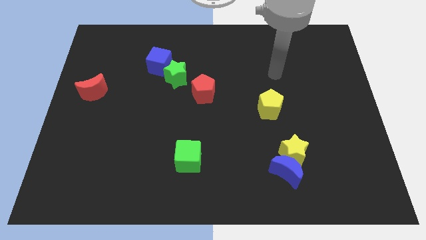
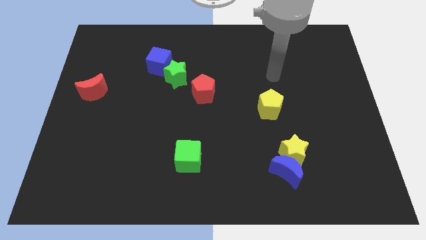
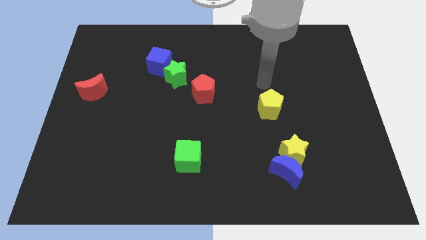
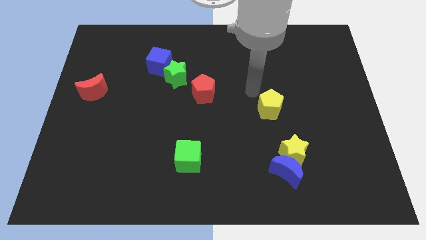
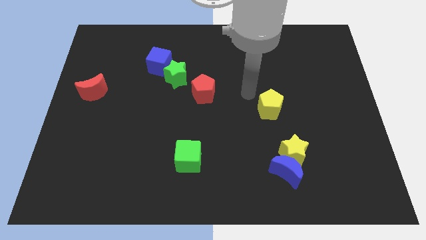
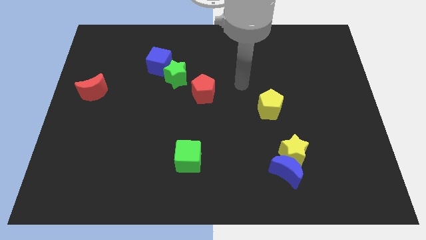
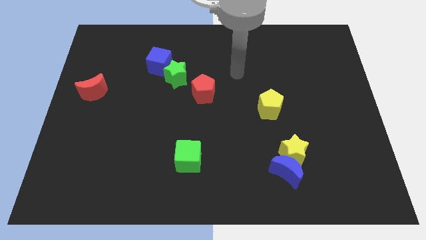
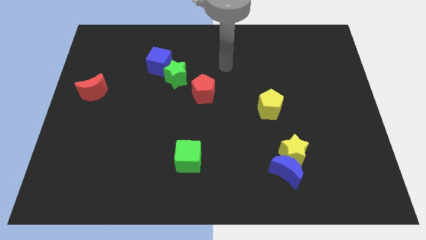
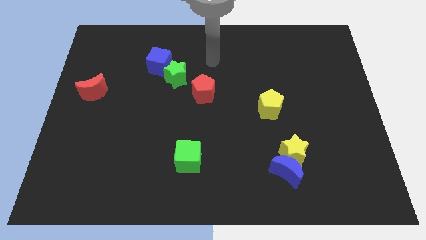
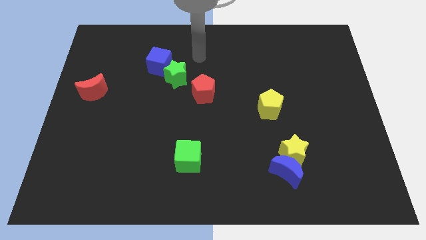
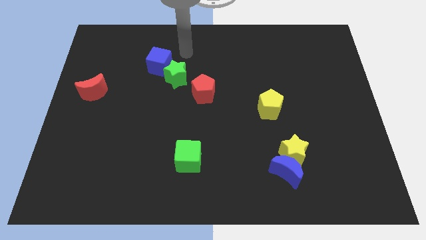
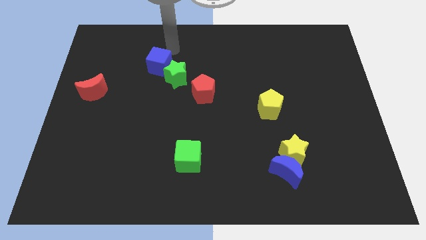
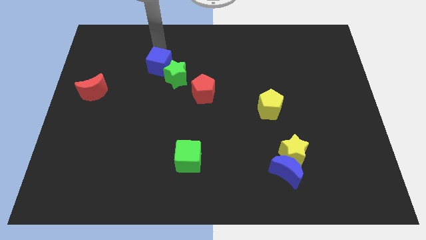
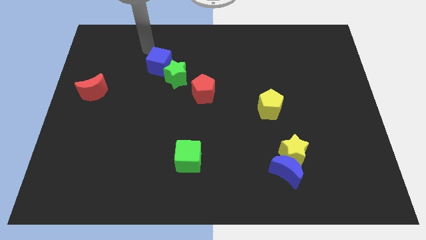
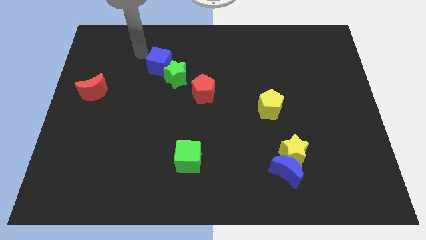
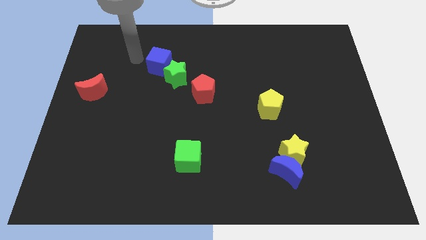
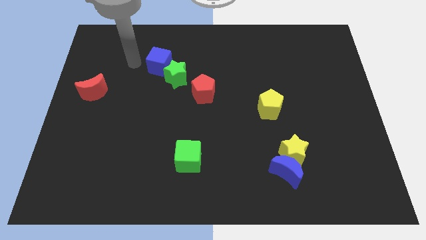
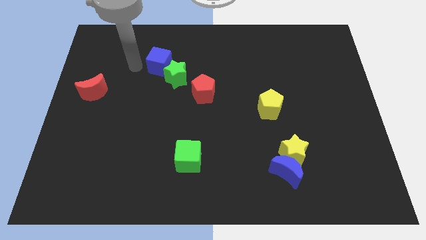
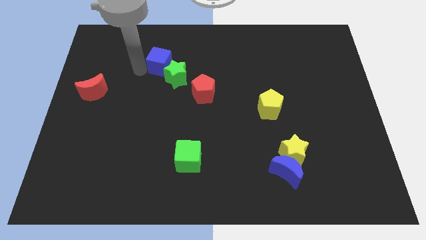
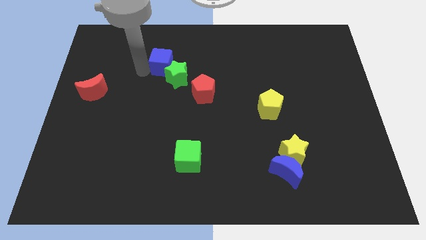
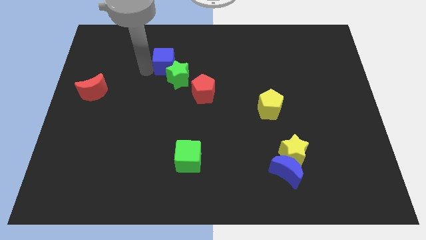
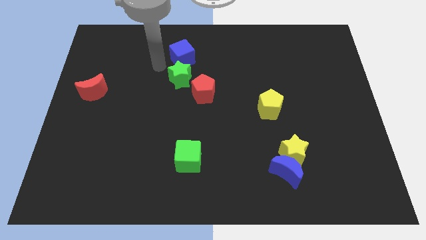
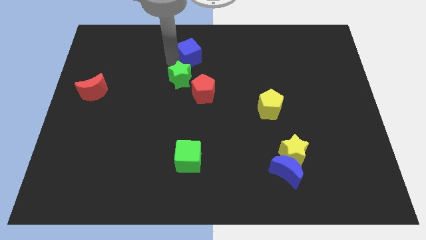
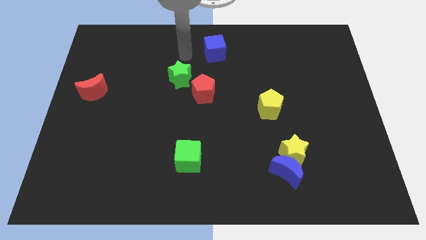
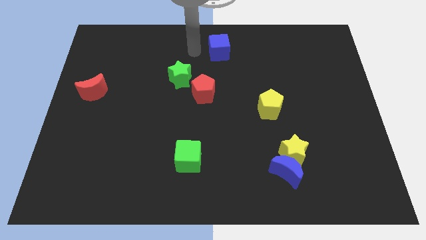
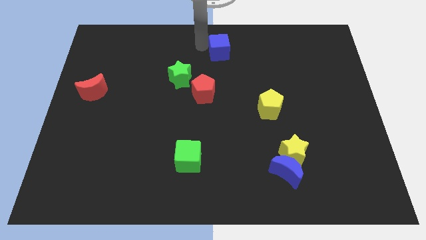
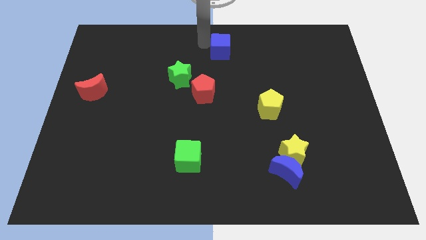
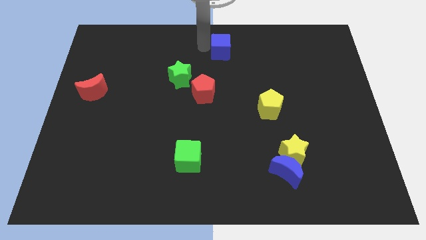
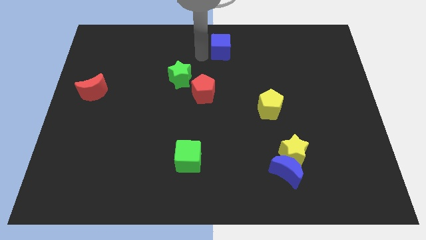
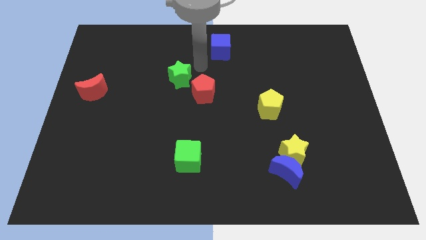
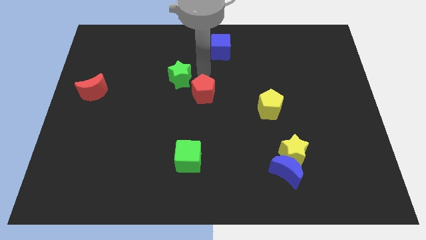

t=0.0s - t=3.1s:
push the blue cube to the top right of the red pentagon

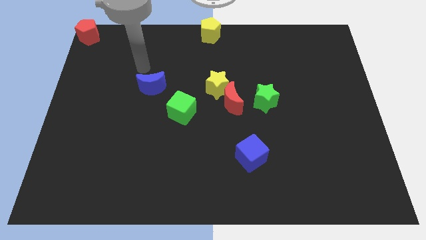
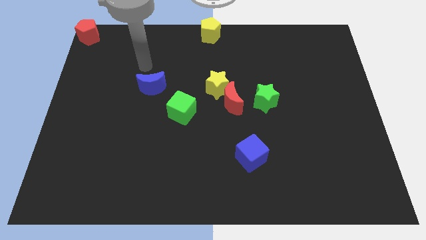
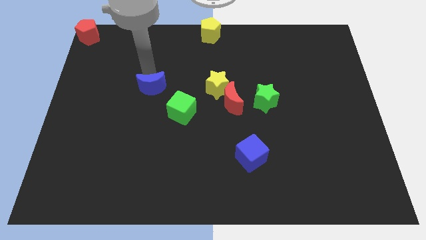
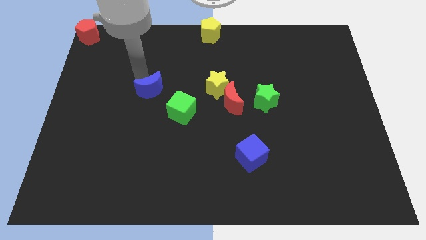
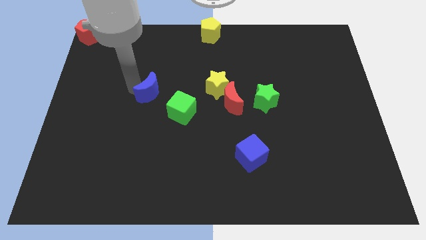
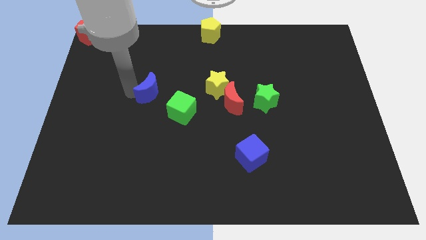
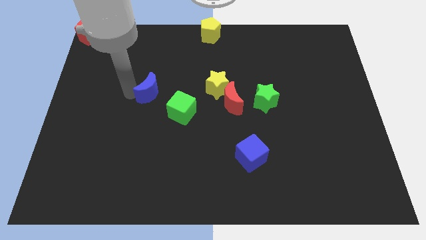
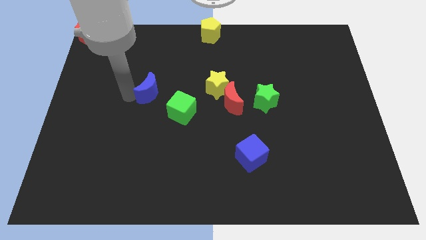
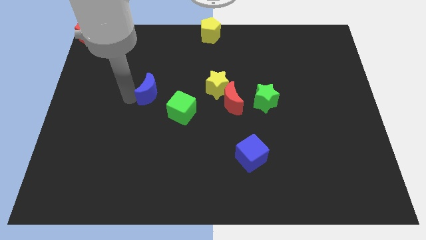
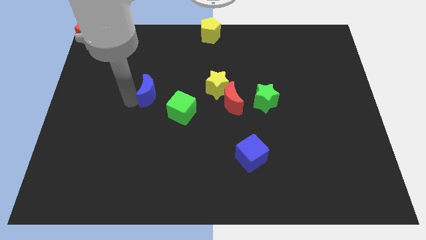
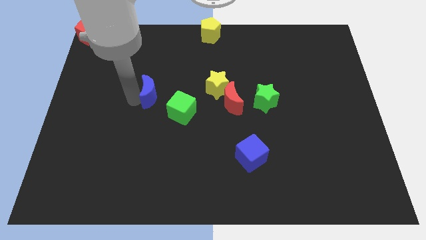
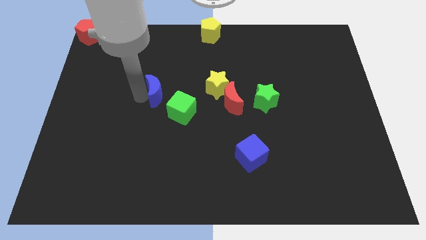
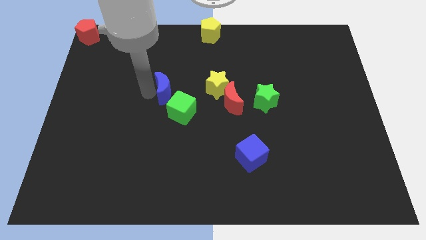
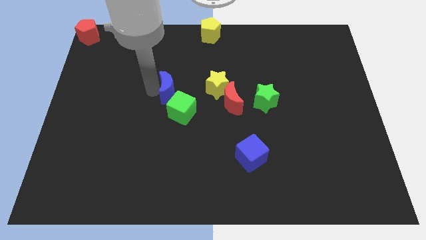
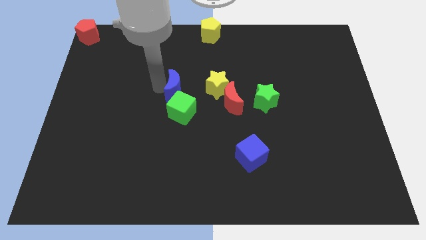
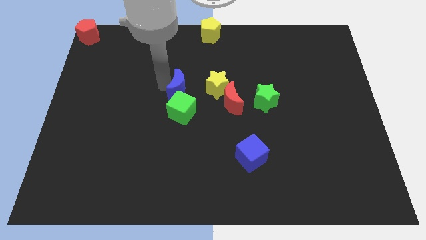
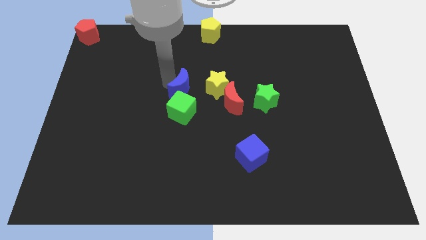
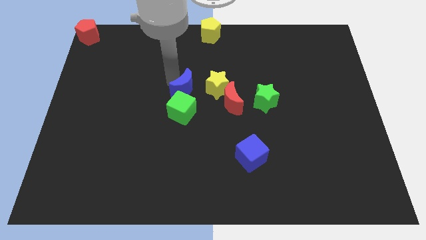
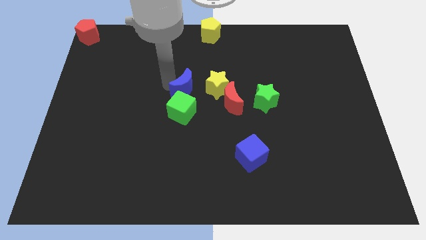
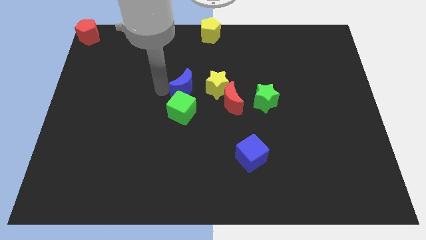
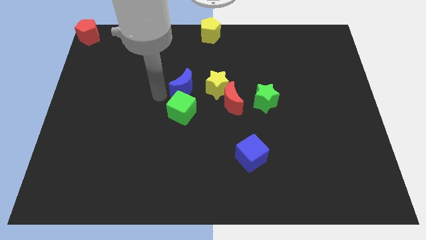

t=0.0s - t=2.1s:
slide blue moon on top of green cube

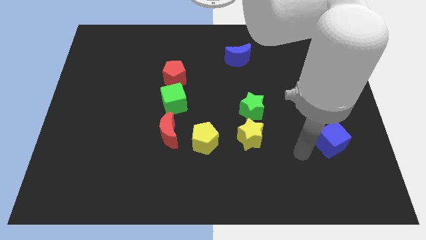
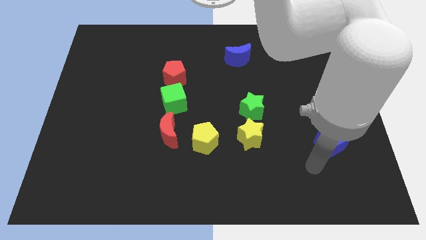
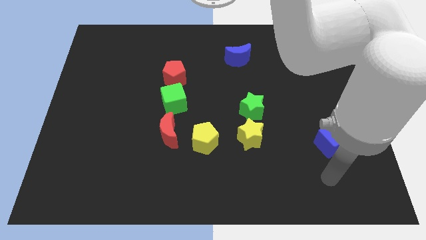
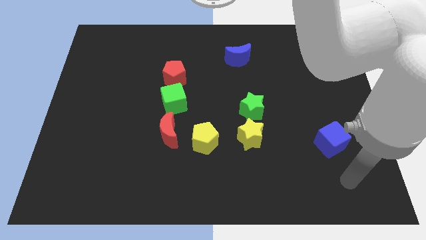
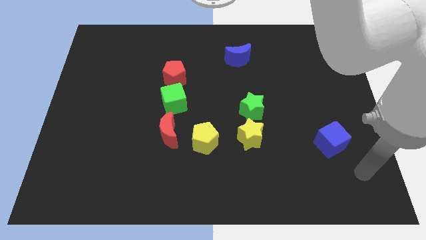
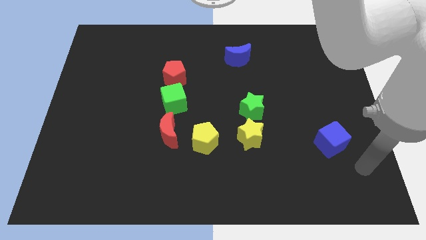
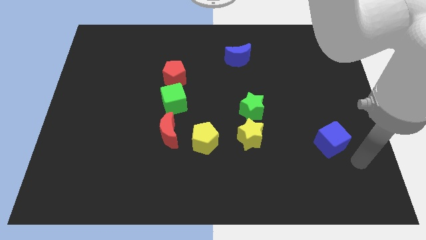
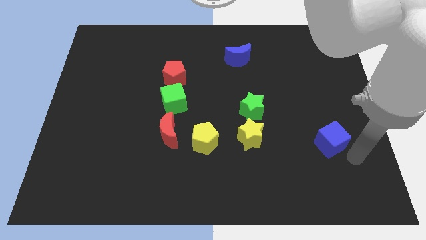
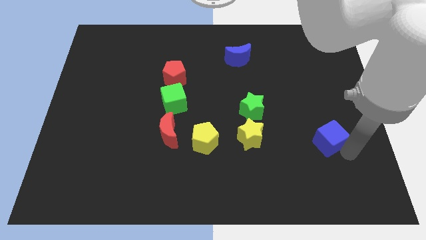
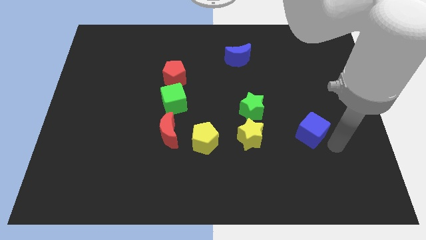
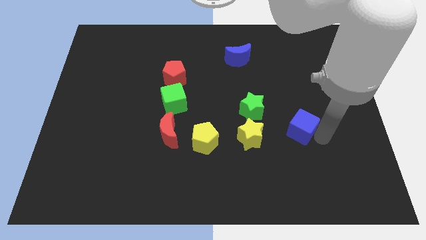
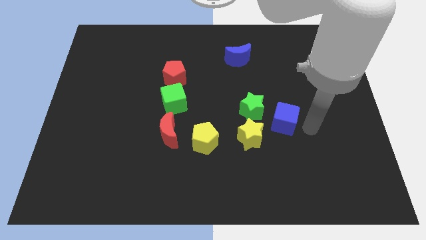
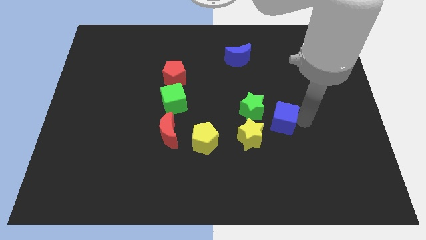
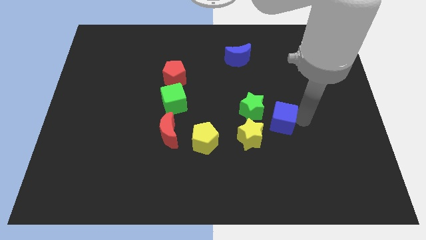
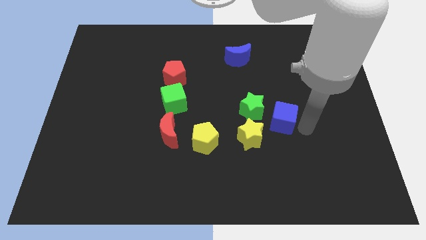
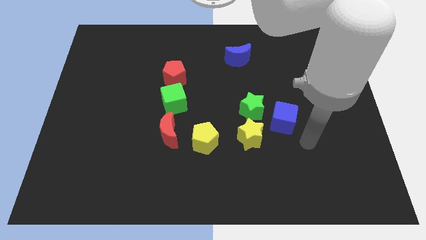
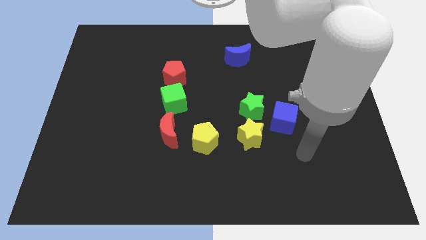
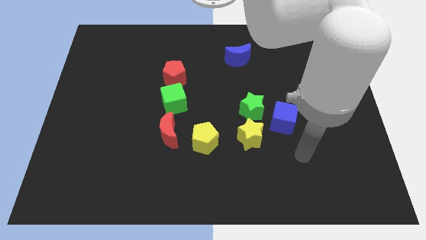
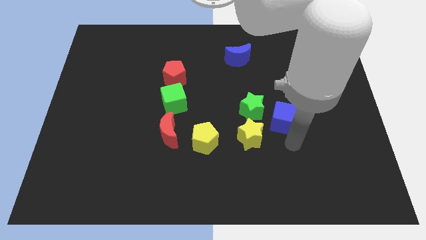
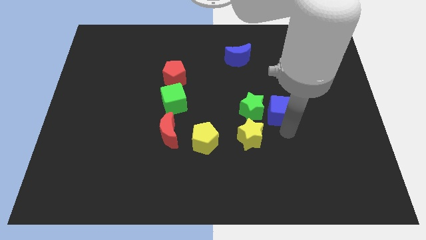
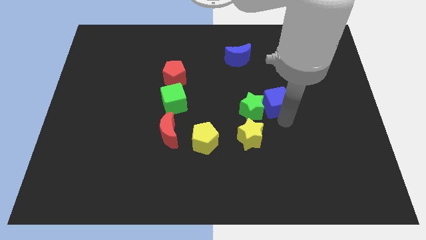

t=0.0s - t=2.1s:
push blue cube into green star

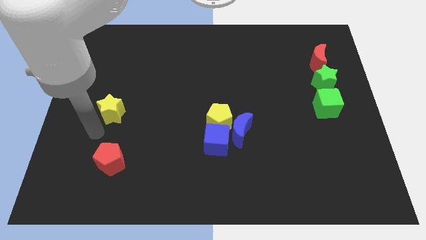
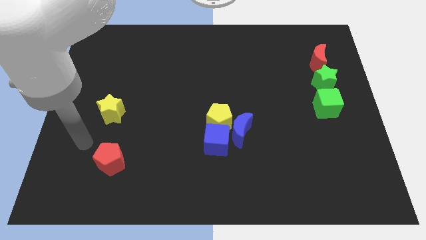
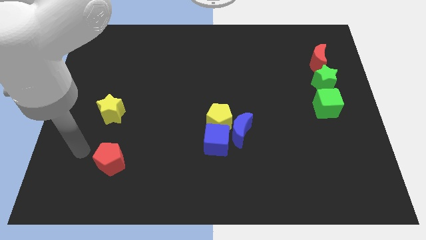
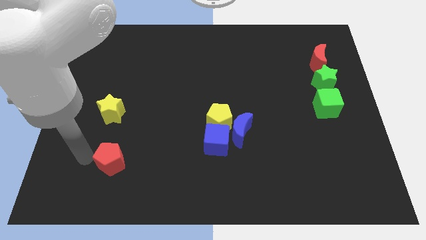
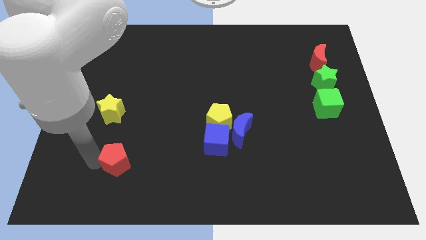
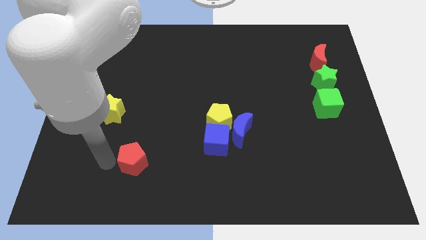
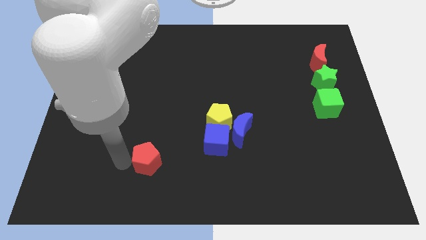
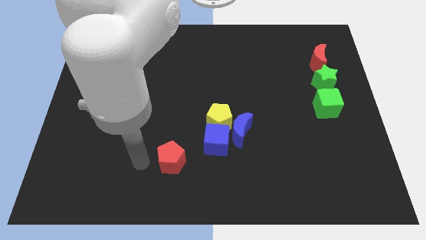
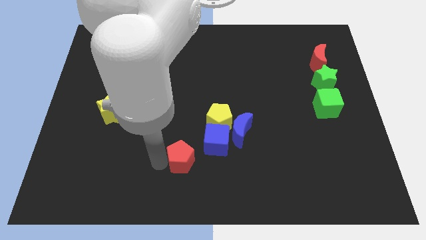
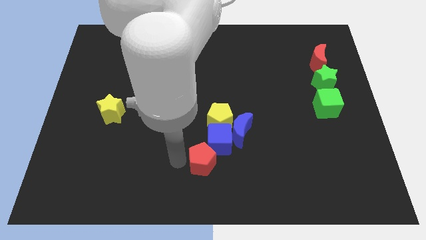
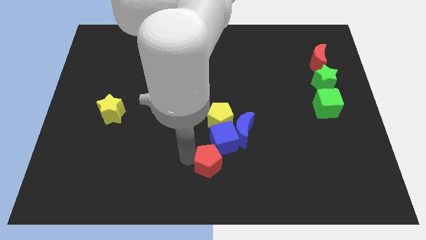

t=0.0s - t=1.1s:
move the red penatgon into the group of block

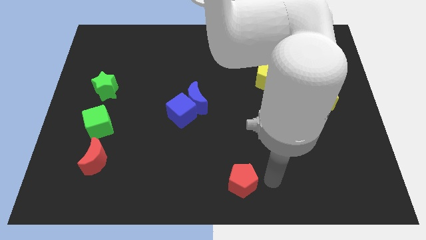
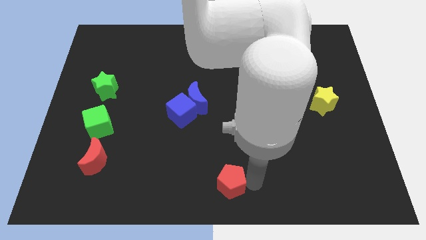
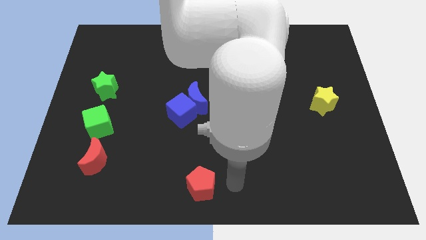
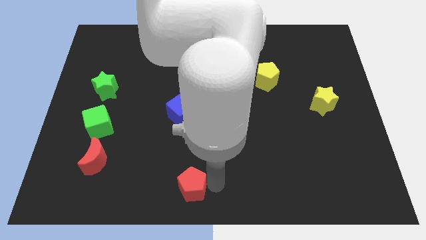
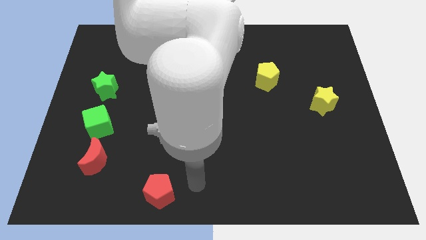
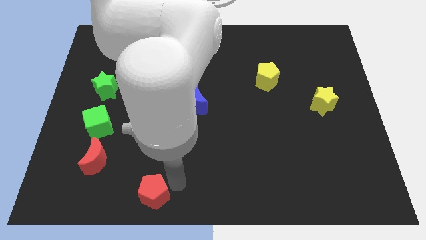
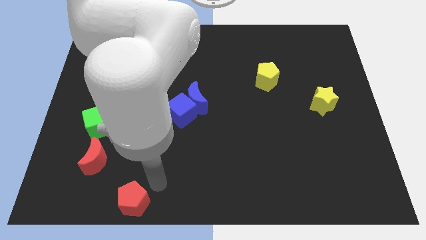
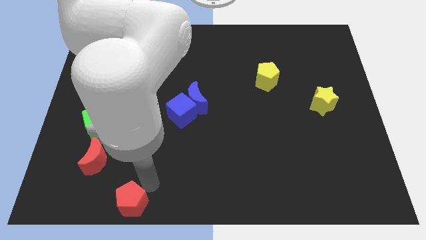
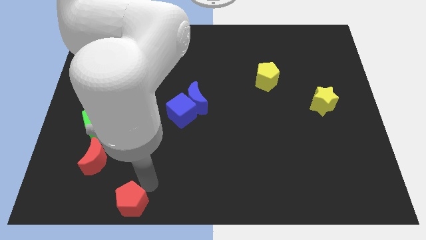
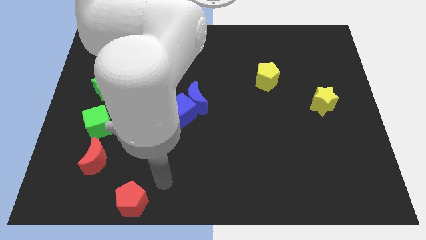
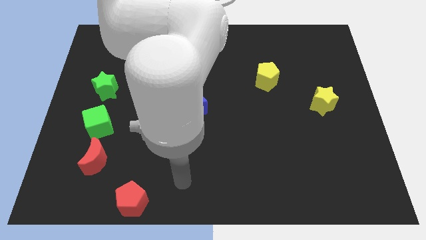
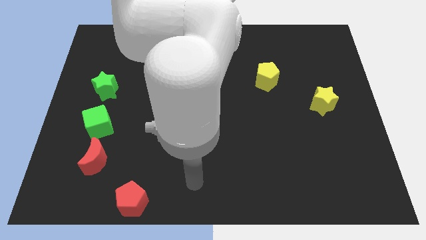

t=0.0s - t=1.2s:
place the red pentagon diagonally towards the red moon
